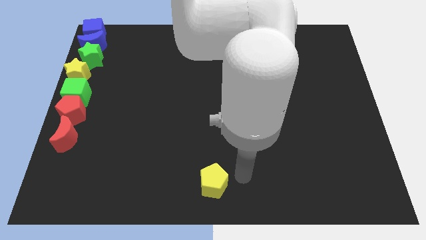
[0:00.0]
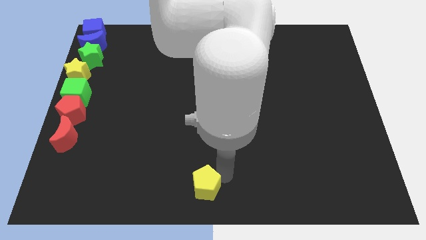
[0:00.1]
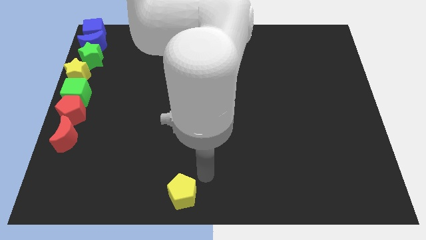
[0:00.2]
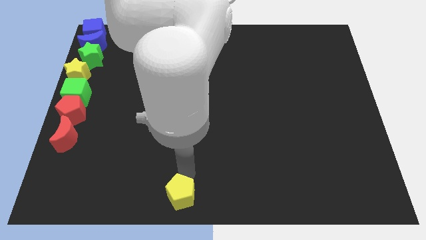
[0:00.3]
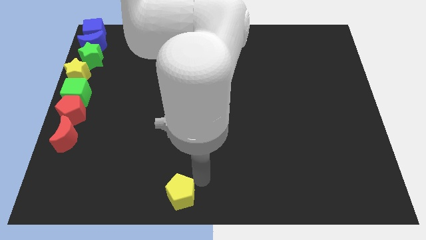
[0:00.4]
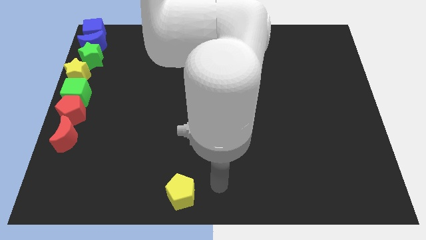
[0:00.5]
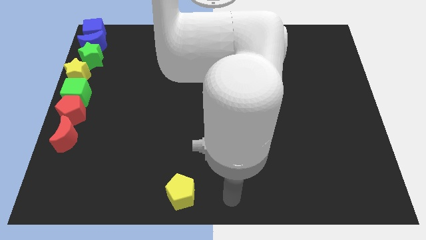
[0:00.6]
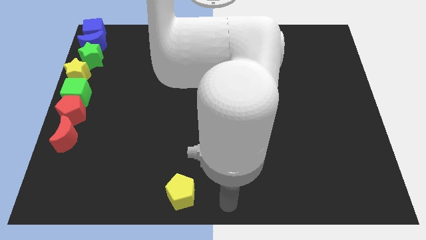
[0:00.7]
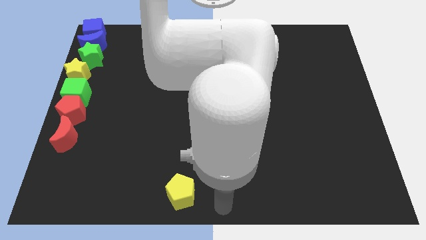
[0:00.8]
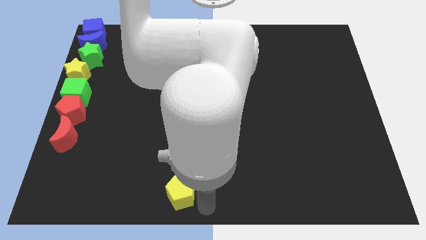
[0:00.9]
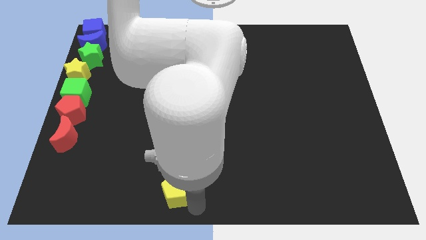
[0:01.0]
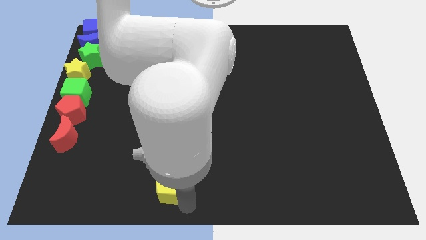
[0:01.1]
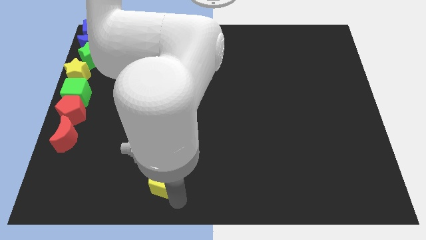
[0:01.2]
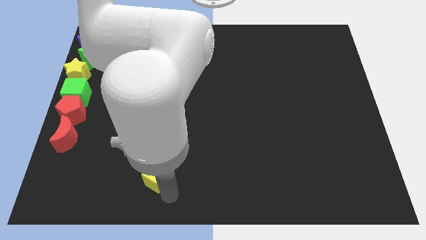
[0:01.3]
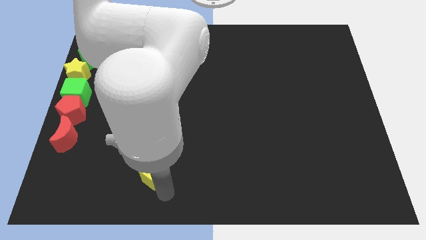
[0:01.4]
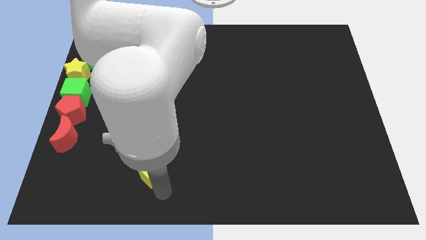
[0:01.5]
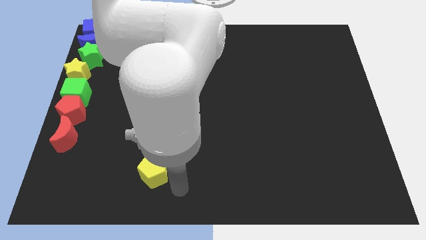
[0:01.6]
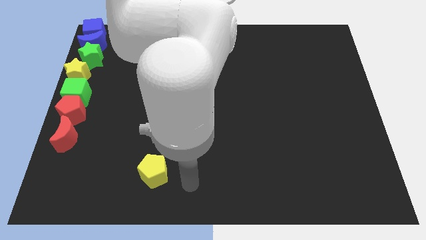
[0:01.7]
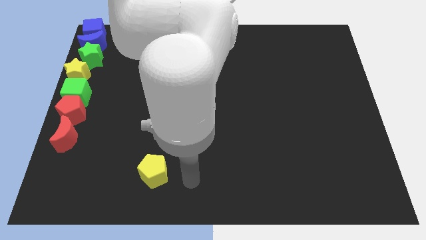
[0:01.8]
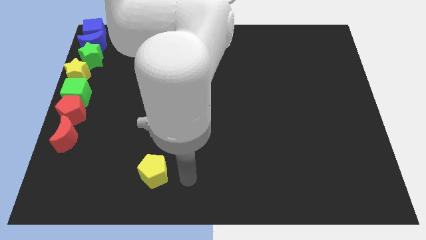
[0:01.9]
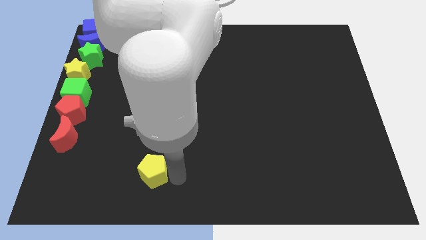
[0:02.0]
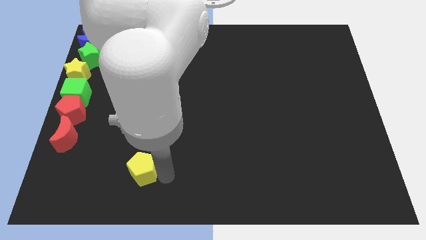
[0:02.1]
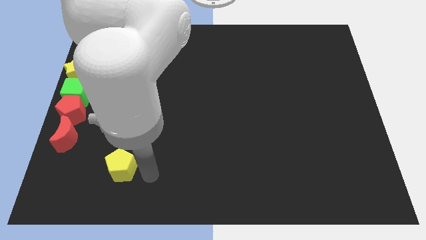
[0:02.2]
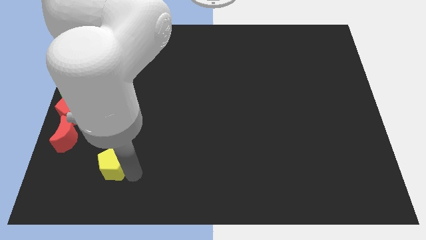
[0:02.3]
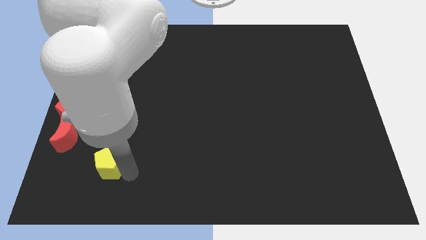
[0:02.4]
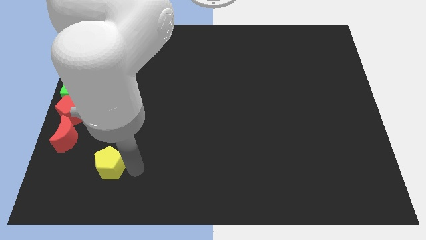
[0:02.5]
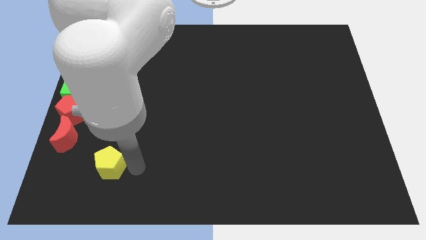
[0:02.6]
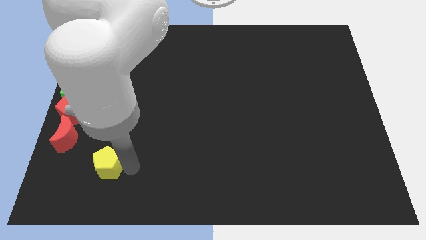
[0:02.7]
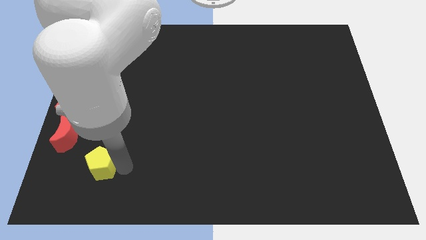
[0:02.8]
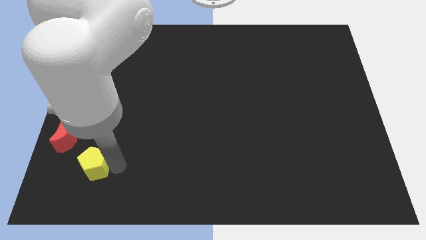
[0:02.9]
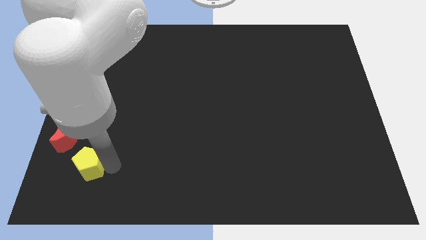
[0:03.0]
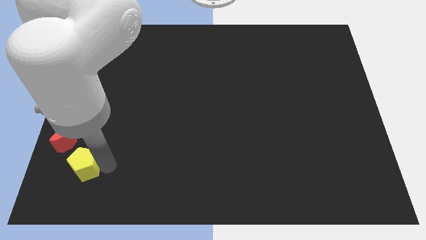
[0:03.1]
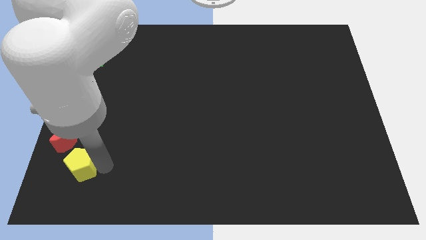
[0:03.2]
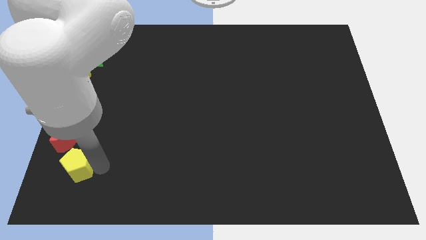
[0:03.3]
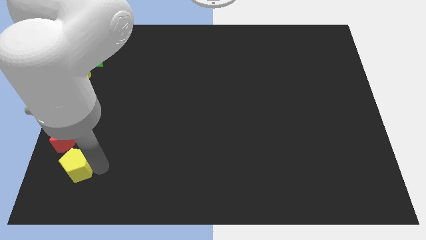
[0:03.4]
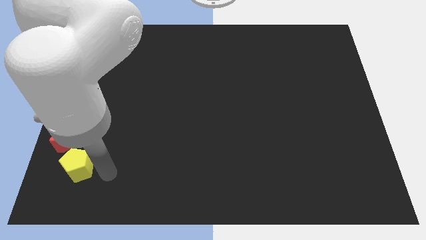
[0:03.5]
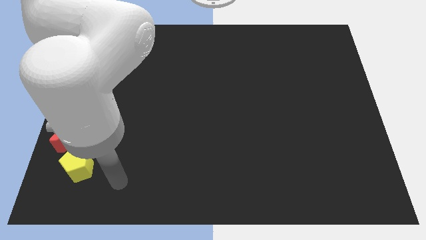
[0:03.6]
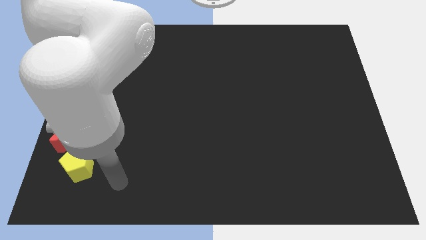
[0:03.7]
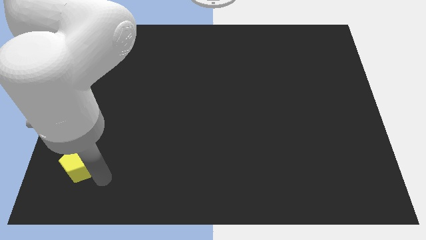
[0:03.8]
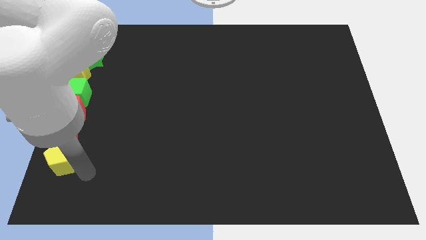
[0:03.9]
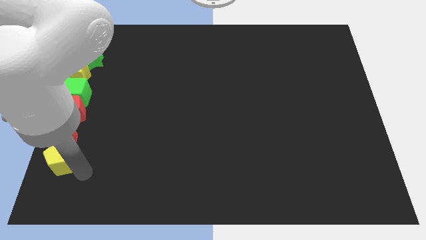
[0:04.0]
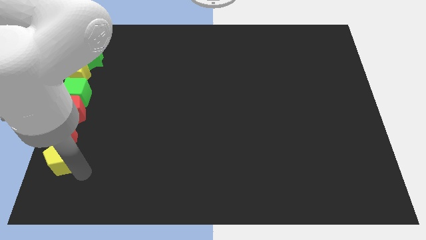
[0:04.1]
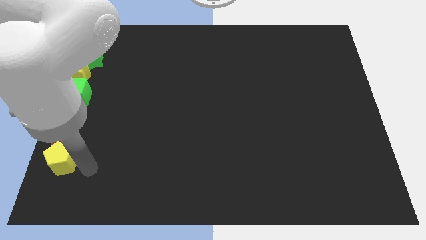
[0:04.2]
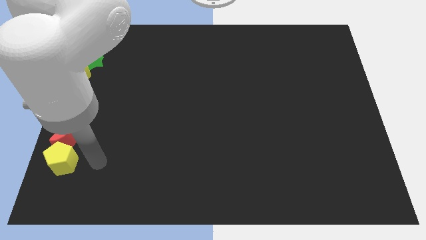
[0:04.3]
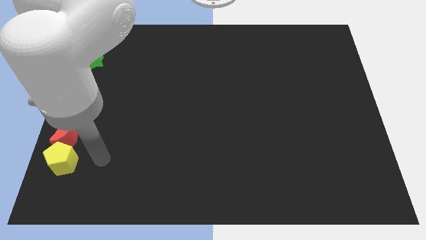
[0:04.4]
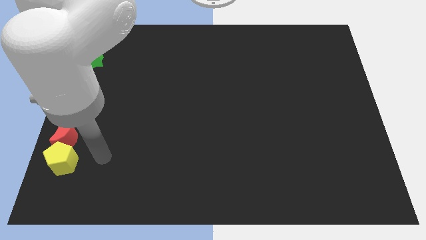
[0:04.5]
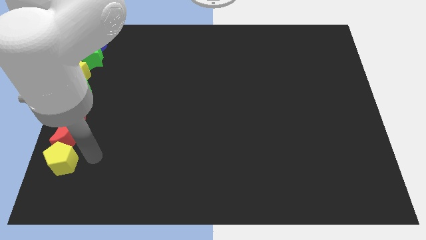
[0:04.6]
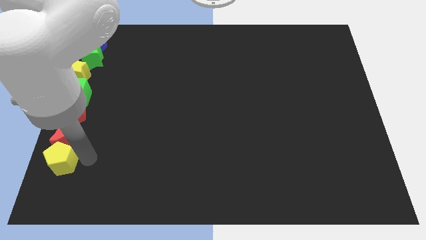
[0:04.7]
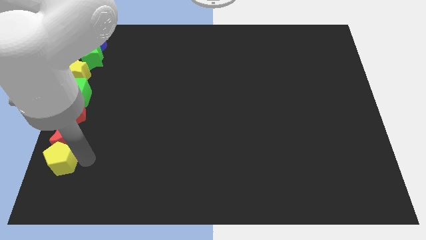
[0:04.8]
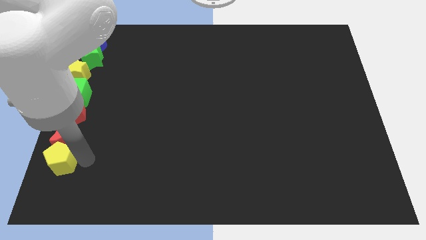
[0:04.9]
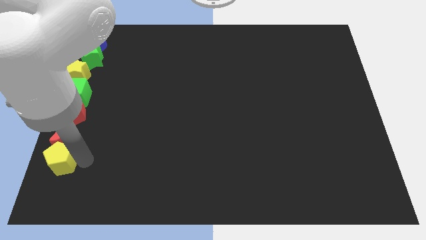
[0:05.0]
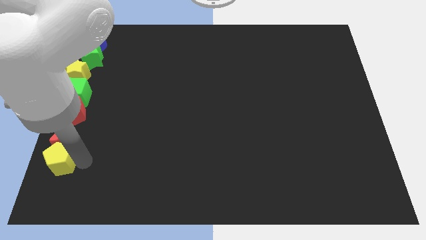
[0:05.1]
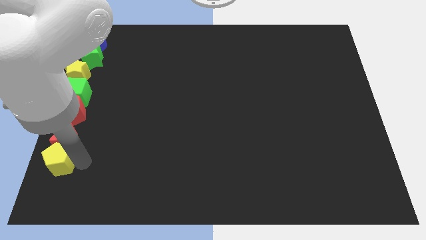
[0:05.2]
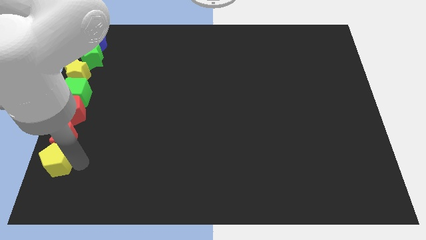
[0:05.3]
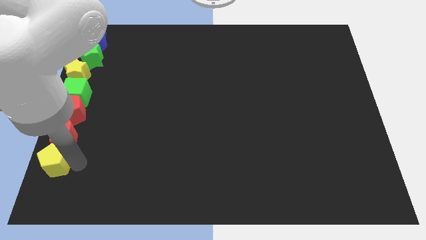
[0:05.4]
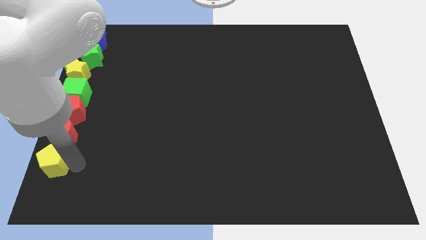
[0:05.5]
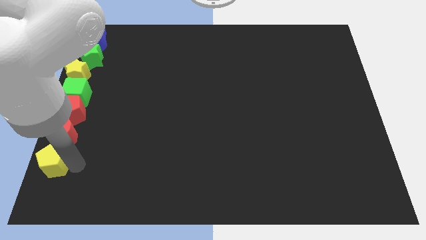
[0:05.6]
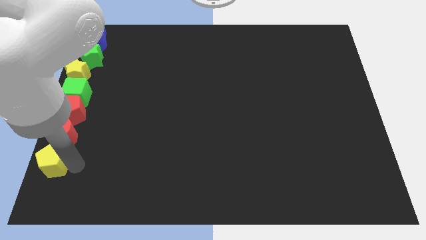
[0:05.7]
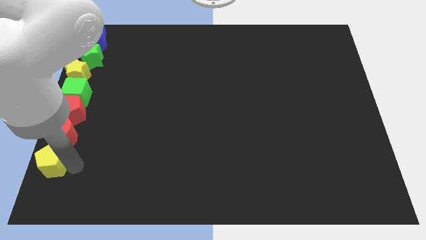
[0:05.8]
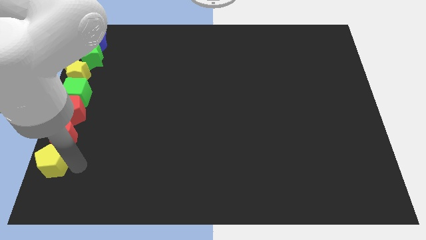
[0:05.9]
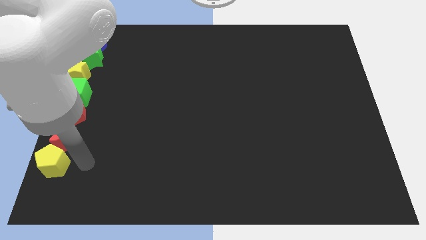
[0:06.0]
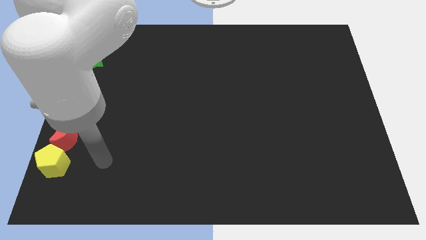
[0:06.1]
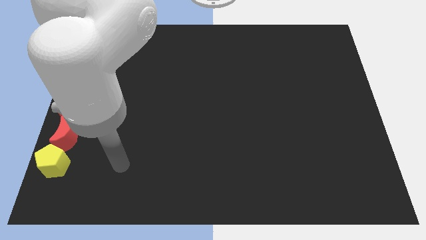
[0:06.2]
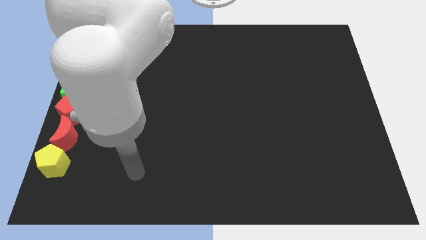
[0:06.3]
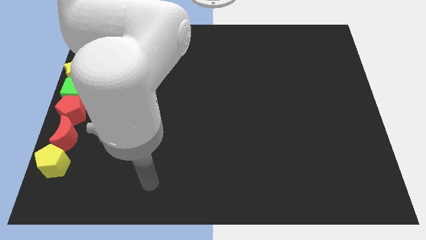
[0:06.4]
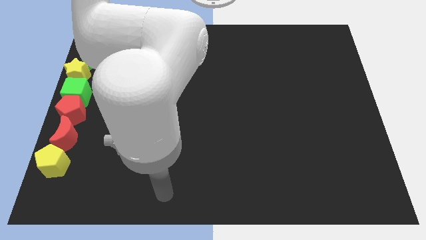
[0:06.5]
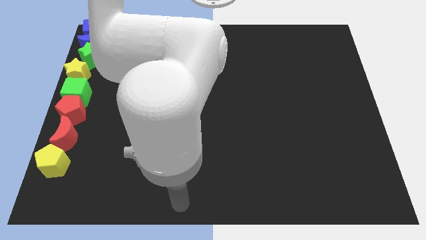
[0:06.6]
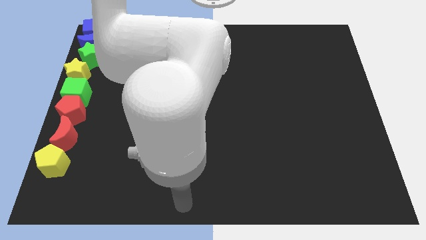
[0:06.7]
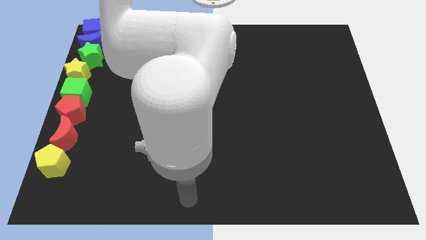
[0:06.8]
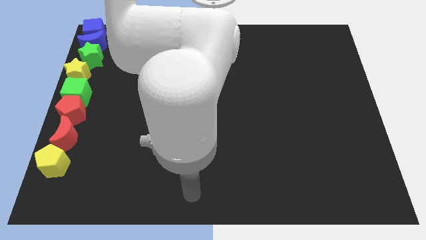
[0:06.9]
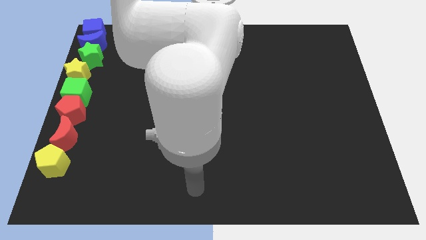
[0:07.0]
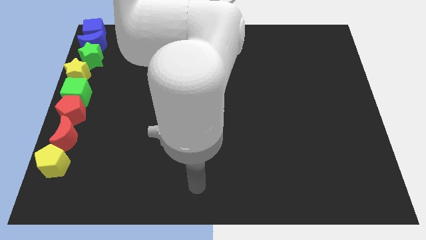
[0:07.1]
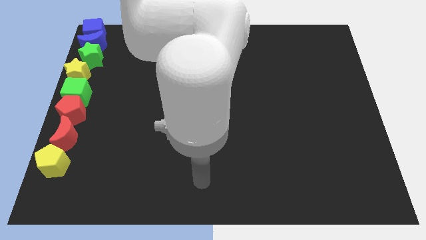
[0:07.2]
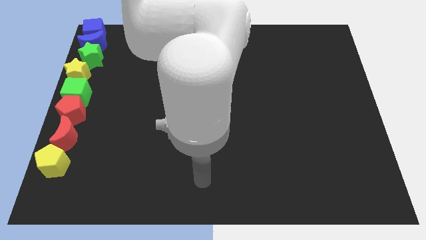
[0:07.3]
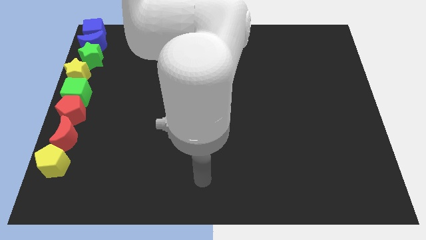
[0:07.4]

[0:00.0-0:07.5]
push the yellow pentagon to the bottom side of the red moon

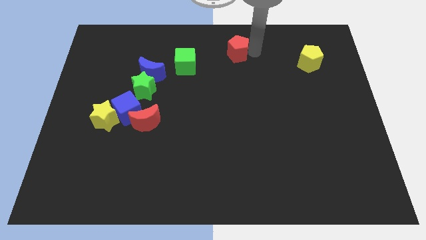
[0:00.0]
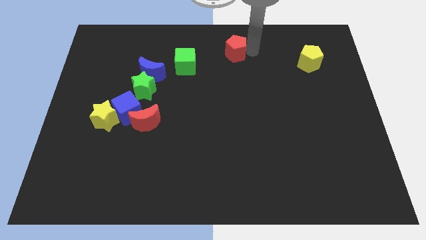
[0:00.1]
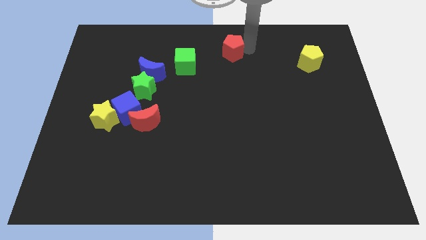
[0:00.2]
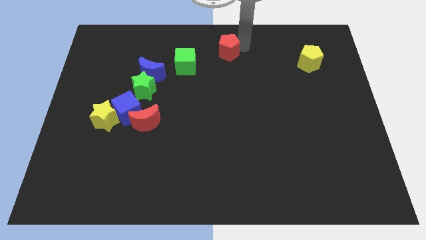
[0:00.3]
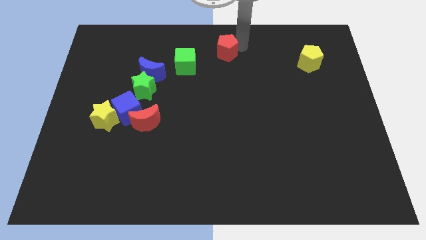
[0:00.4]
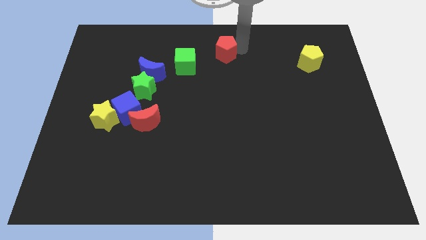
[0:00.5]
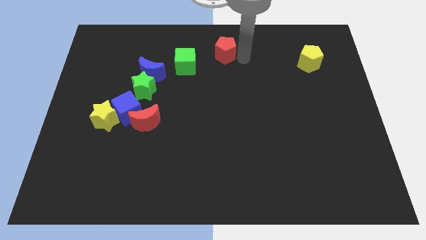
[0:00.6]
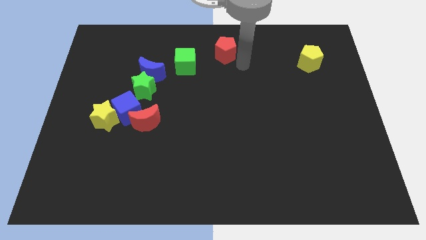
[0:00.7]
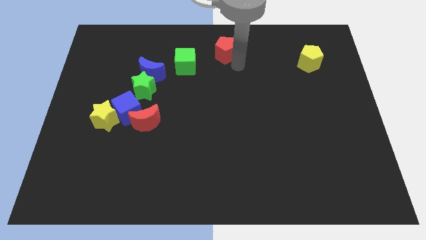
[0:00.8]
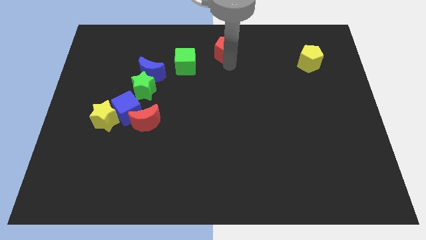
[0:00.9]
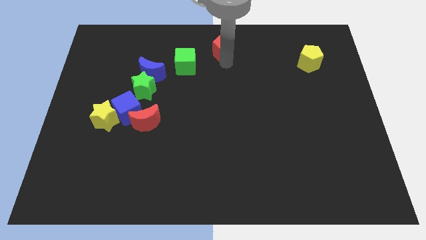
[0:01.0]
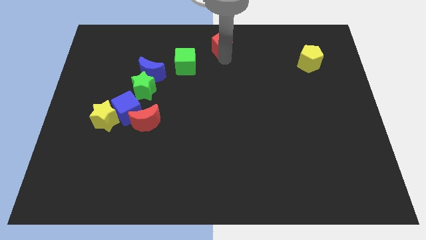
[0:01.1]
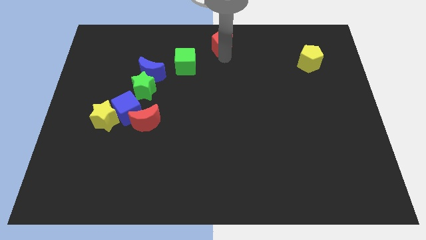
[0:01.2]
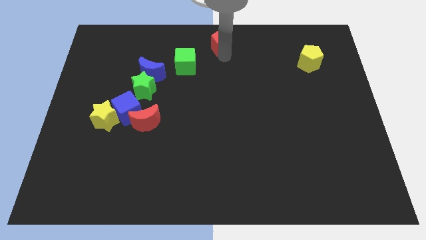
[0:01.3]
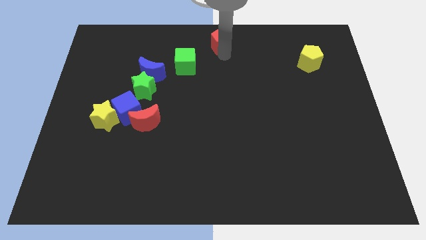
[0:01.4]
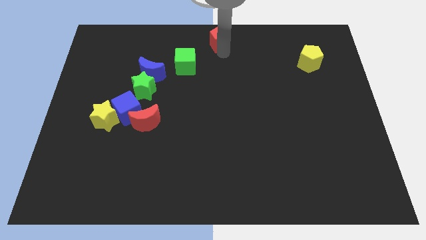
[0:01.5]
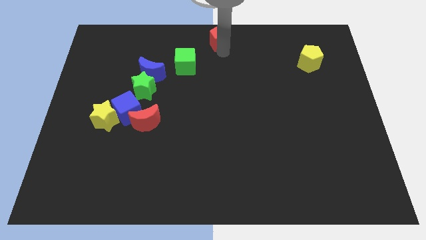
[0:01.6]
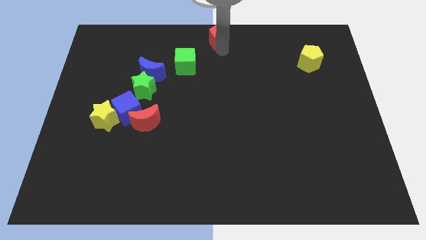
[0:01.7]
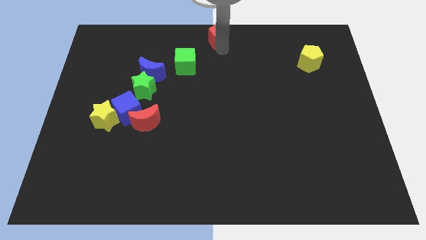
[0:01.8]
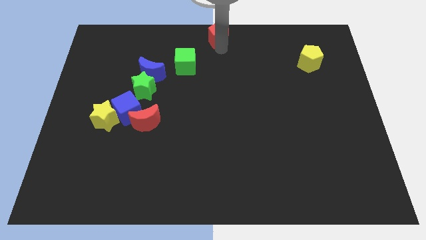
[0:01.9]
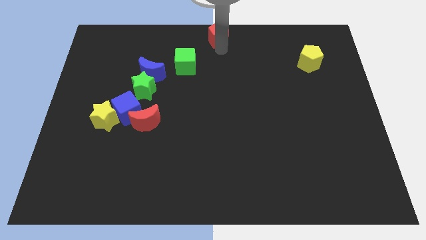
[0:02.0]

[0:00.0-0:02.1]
place the red pentagon at top center of the board
